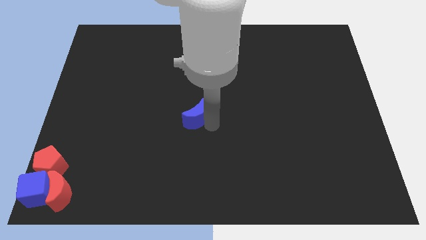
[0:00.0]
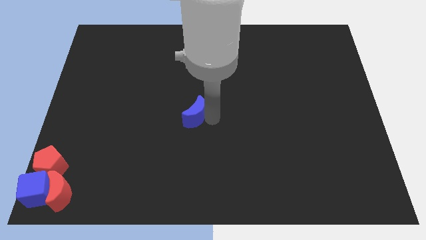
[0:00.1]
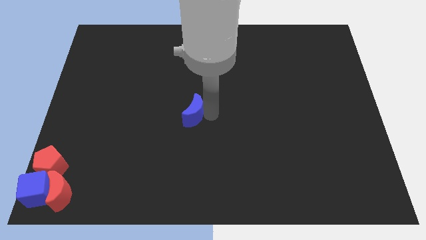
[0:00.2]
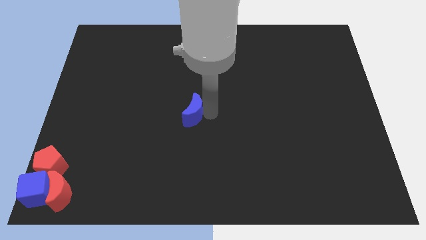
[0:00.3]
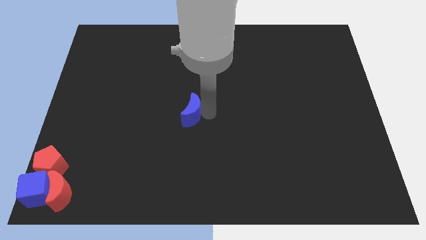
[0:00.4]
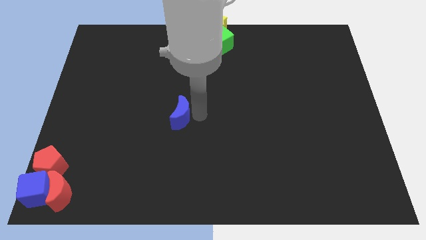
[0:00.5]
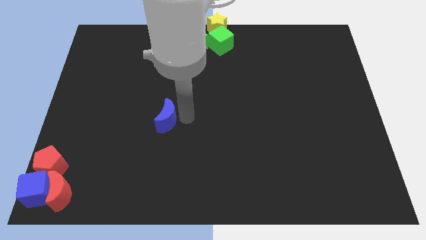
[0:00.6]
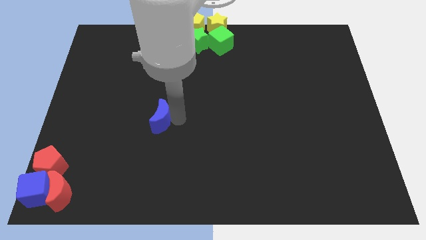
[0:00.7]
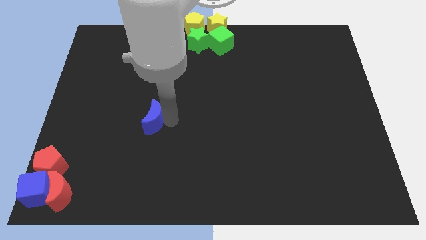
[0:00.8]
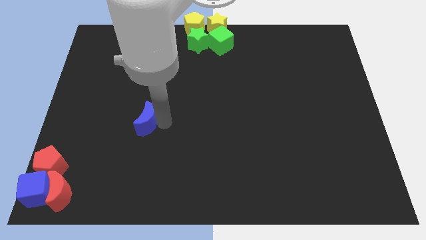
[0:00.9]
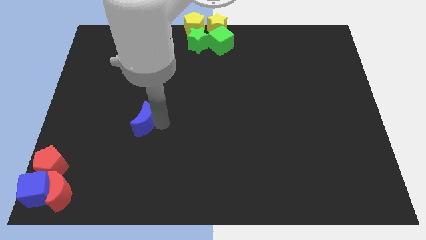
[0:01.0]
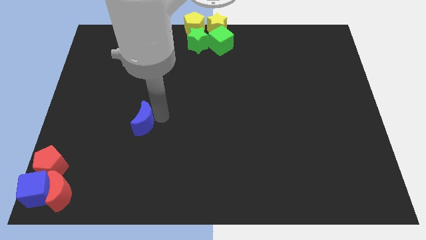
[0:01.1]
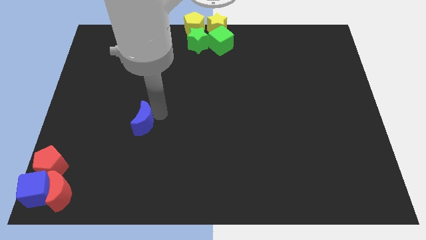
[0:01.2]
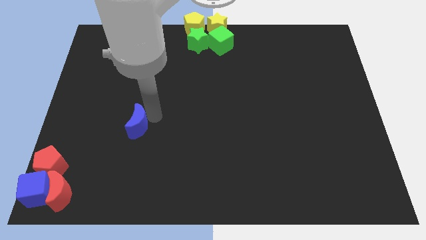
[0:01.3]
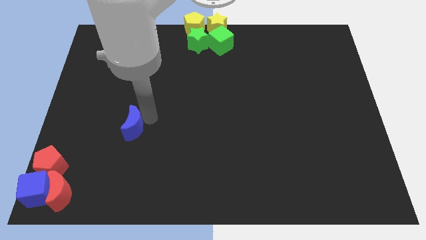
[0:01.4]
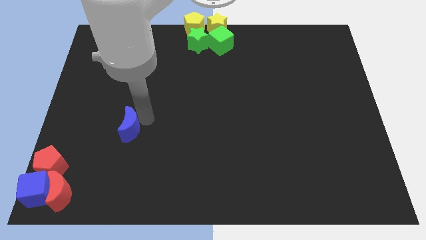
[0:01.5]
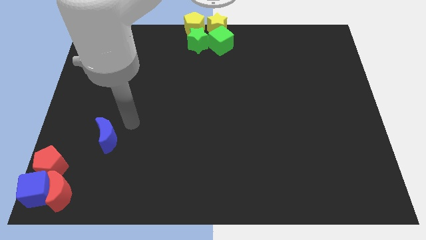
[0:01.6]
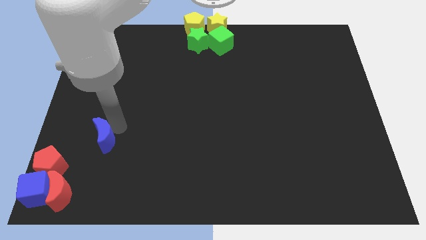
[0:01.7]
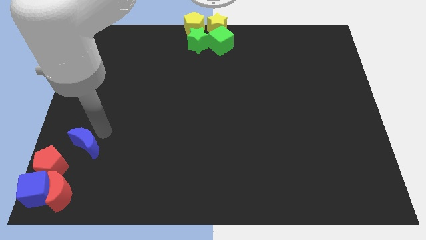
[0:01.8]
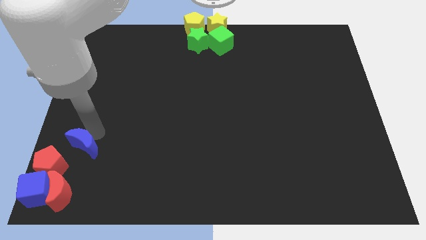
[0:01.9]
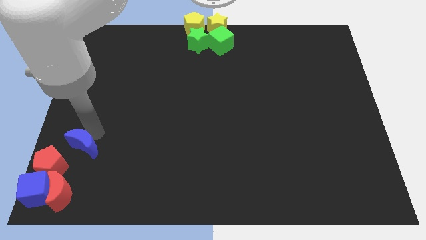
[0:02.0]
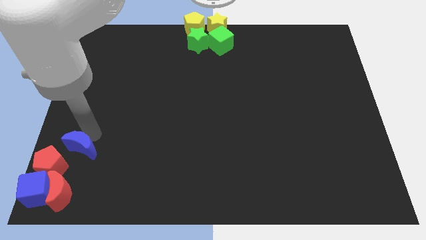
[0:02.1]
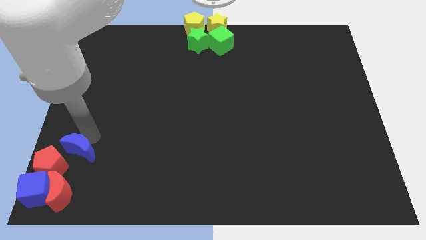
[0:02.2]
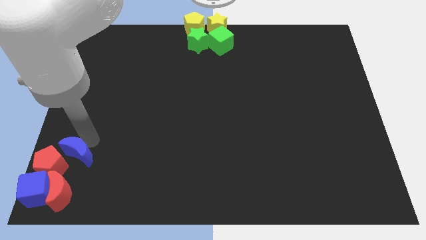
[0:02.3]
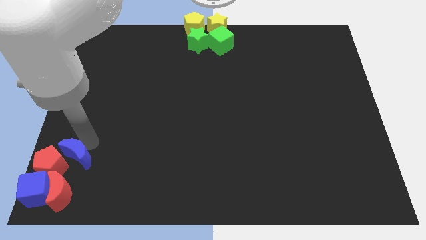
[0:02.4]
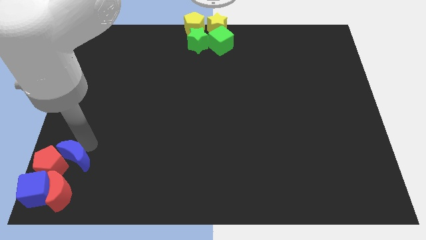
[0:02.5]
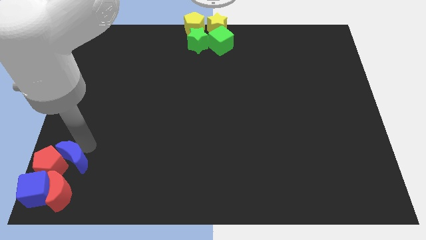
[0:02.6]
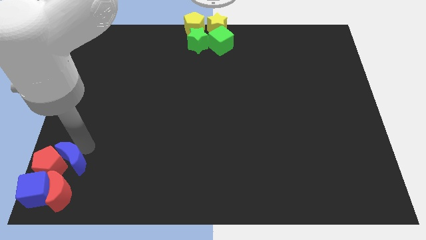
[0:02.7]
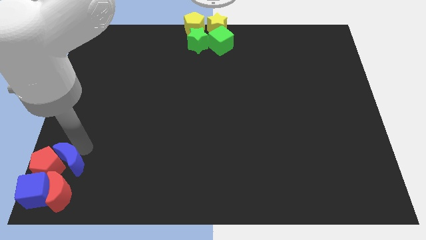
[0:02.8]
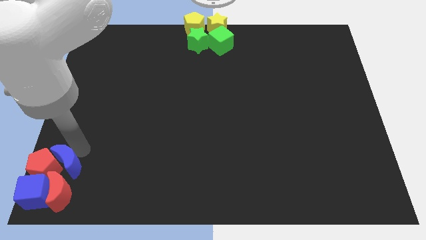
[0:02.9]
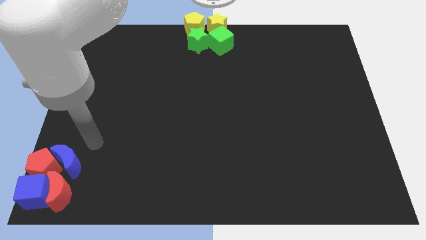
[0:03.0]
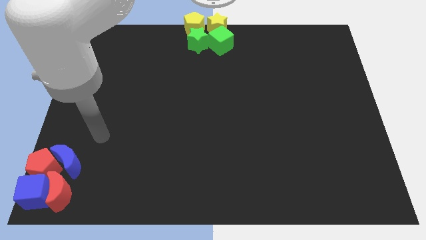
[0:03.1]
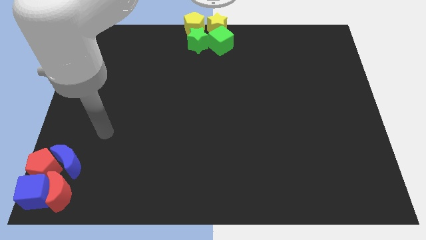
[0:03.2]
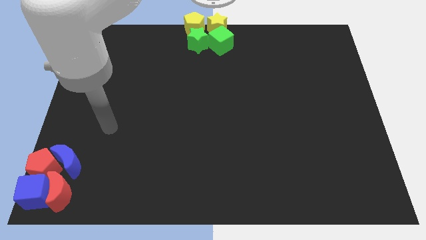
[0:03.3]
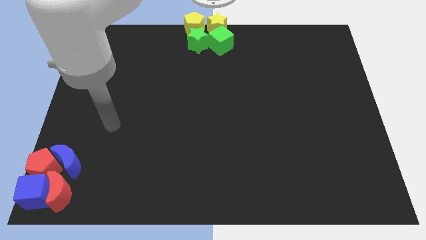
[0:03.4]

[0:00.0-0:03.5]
push the blue crescent into the red pentagon

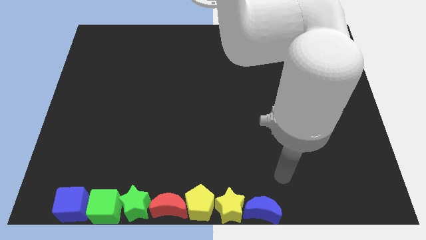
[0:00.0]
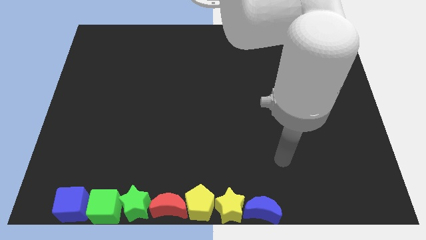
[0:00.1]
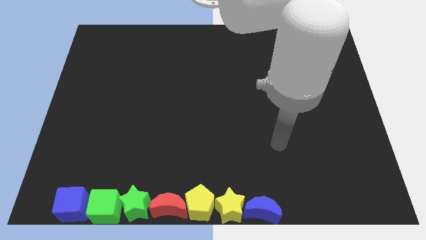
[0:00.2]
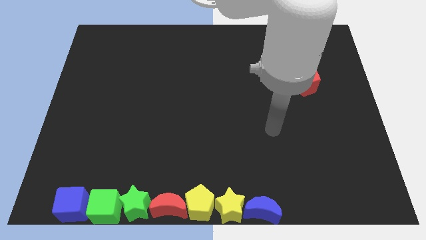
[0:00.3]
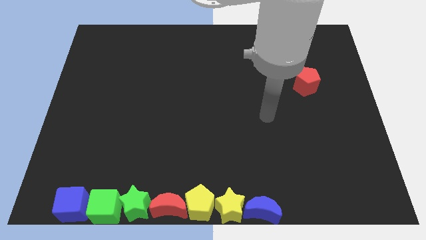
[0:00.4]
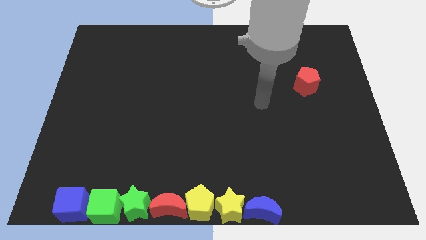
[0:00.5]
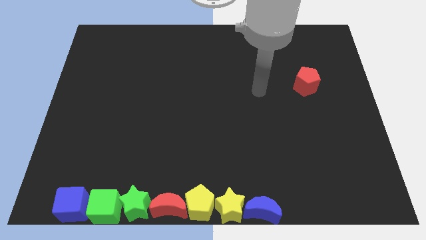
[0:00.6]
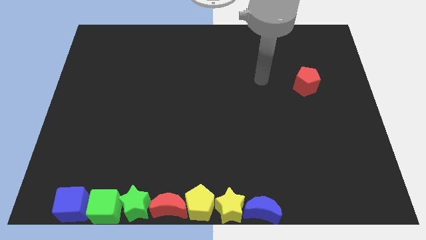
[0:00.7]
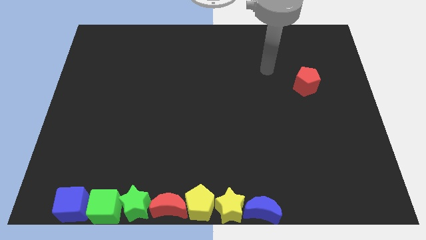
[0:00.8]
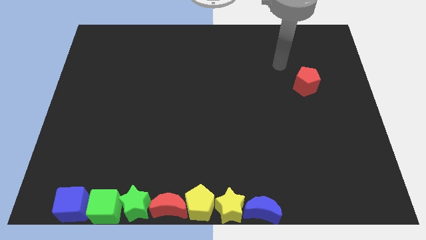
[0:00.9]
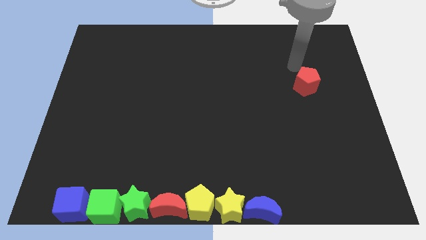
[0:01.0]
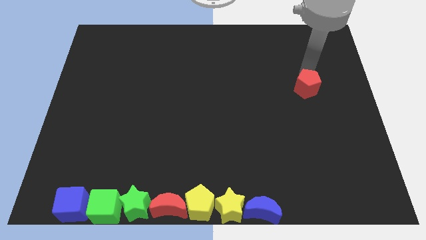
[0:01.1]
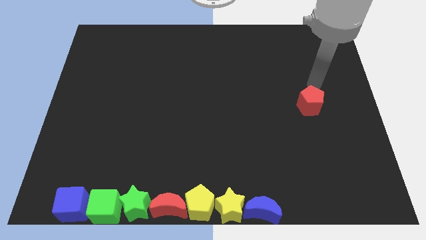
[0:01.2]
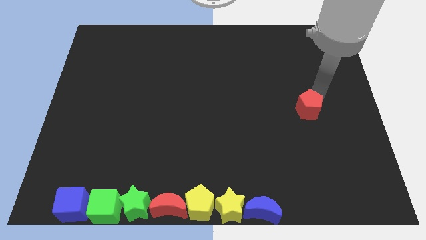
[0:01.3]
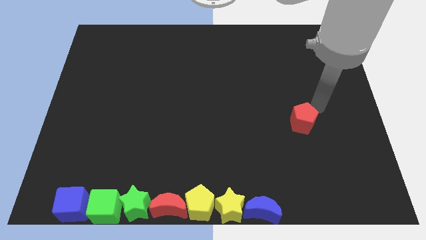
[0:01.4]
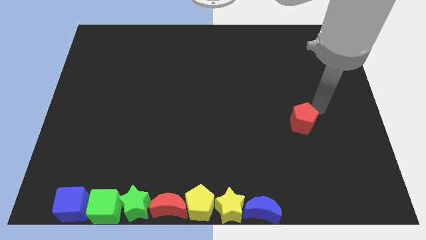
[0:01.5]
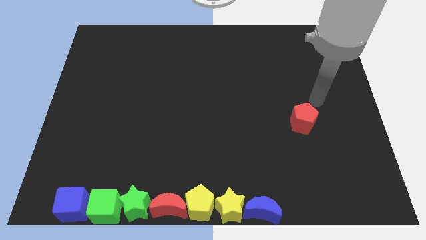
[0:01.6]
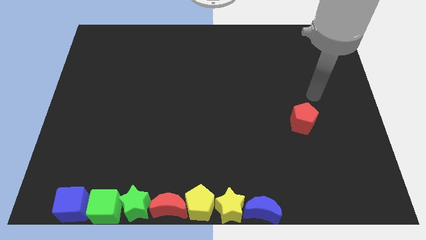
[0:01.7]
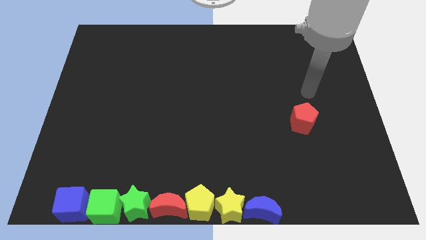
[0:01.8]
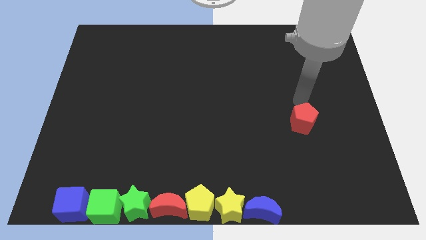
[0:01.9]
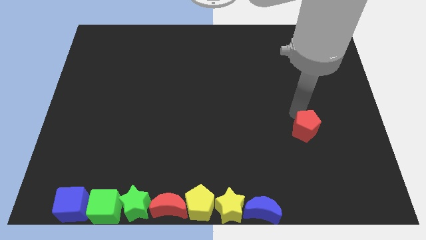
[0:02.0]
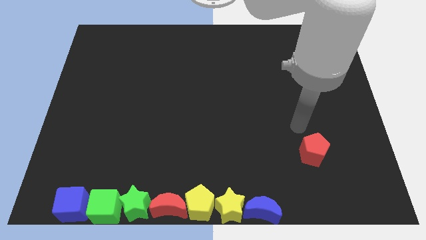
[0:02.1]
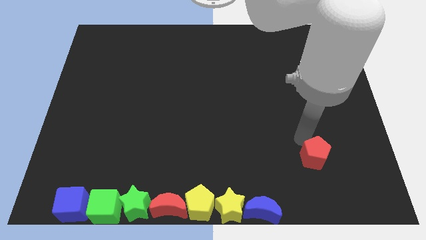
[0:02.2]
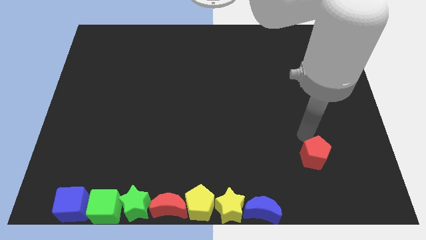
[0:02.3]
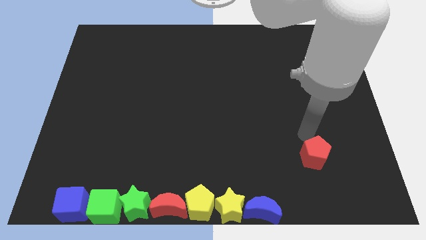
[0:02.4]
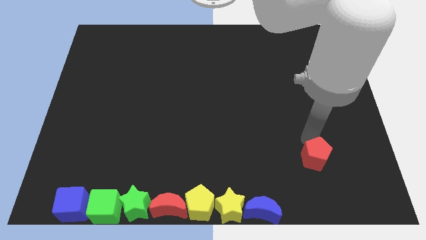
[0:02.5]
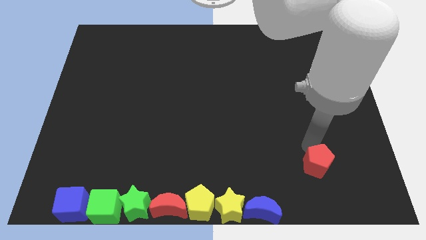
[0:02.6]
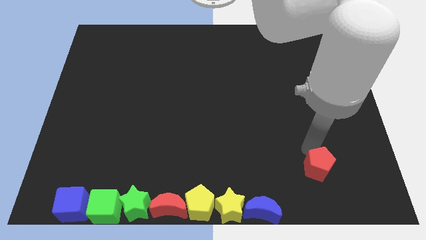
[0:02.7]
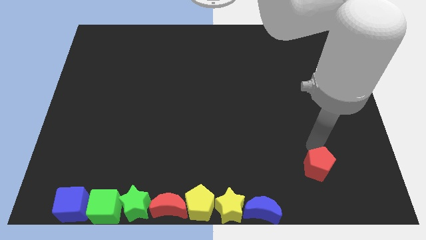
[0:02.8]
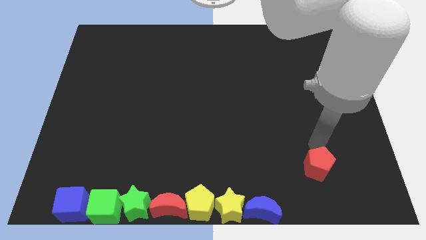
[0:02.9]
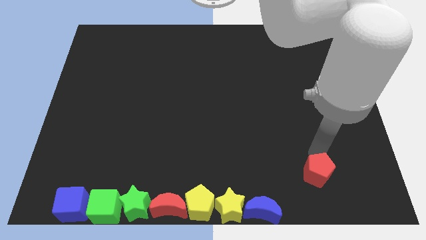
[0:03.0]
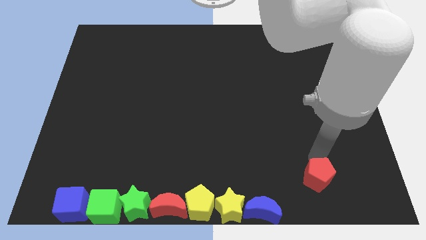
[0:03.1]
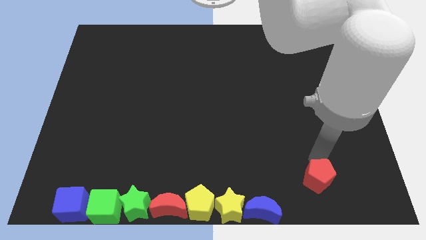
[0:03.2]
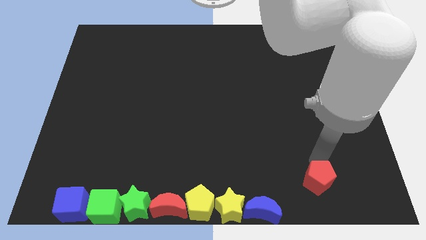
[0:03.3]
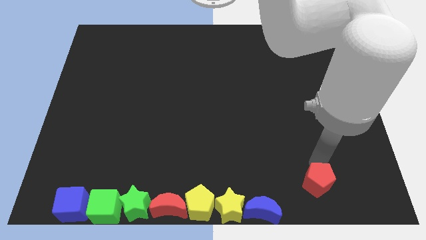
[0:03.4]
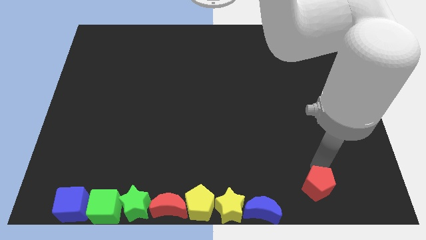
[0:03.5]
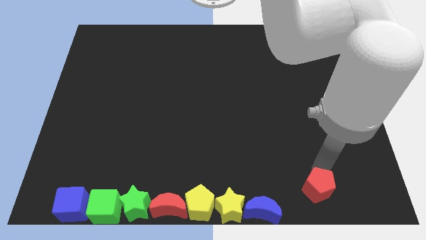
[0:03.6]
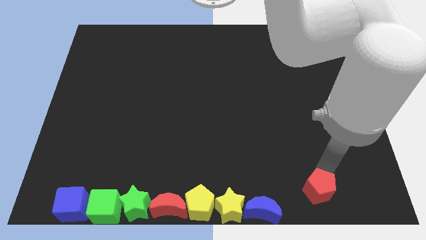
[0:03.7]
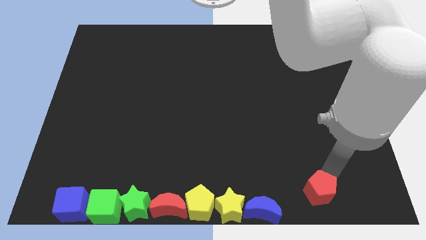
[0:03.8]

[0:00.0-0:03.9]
push the red pentagon to the bottom of the board

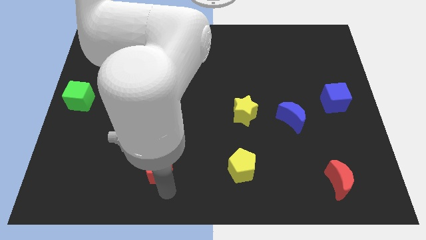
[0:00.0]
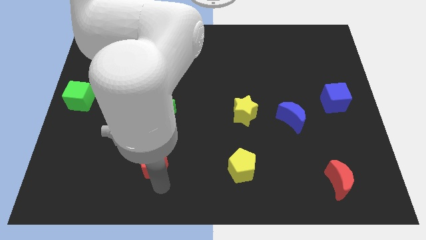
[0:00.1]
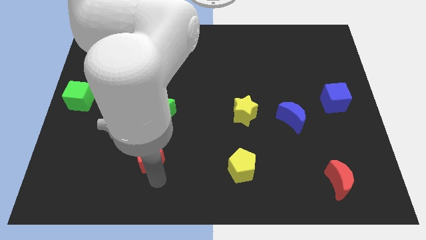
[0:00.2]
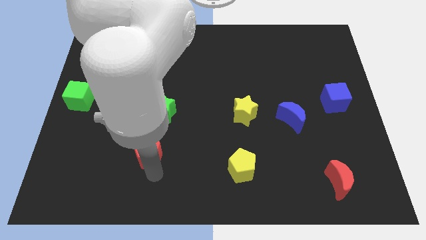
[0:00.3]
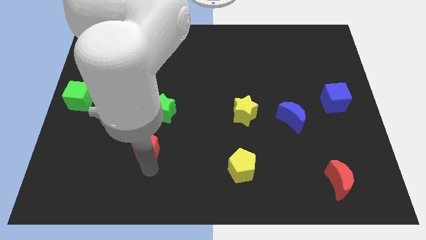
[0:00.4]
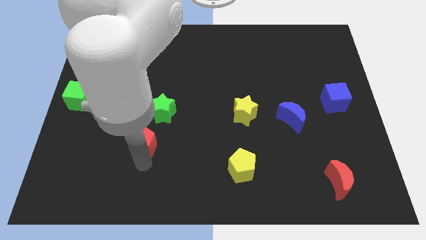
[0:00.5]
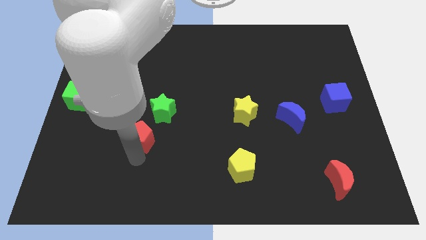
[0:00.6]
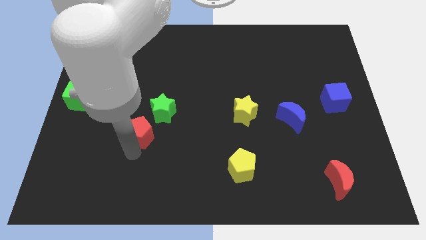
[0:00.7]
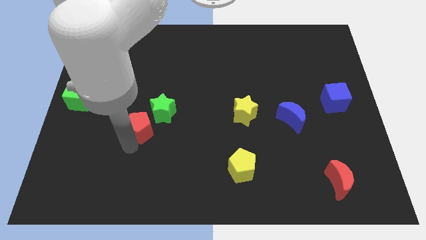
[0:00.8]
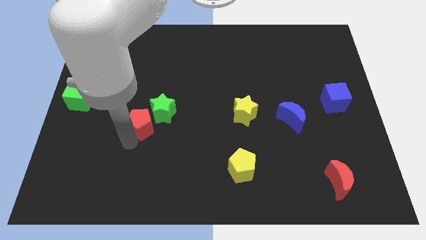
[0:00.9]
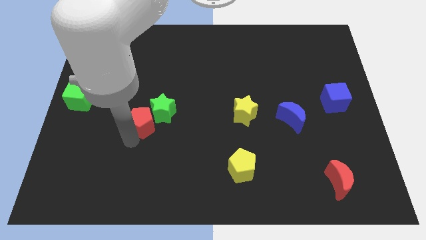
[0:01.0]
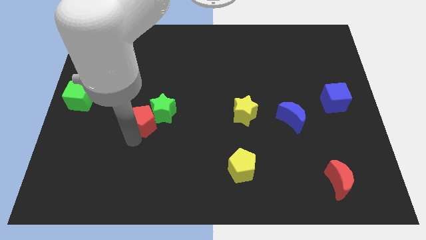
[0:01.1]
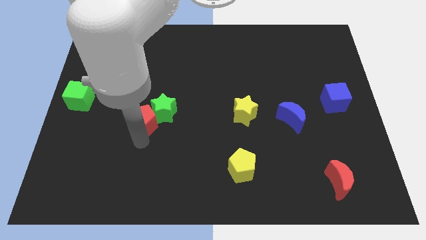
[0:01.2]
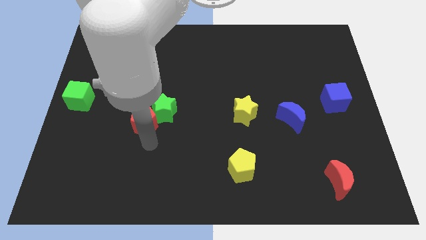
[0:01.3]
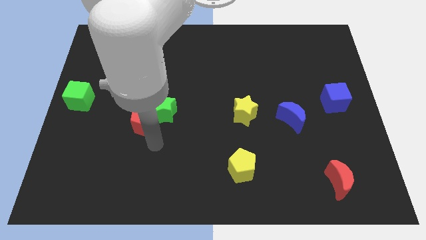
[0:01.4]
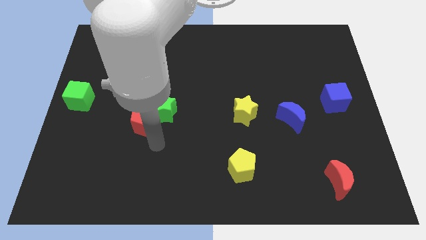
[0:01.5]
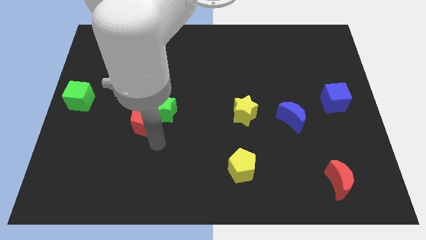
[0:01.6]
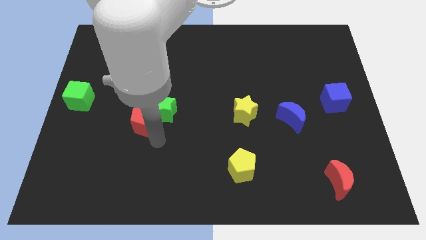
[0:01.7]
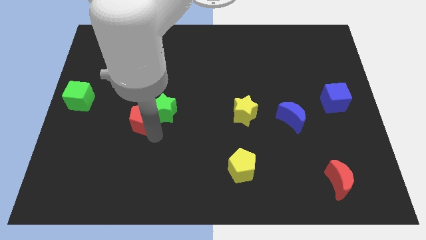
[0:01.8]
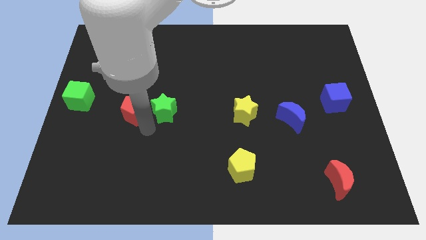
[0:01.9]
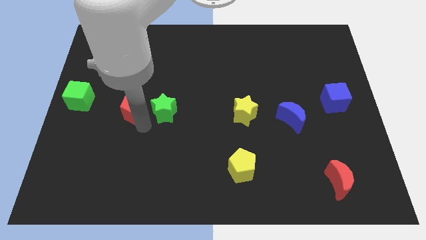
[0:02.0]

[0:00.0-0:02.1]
move the red pentagon near to the green star
